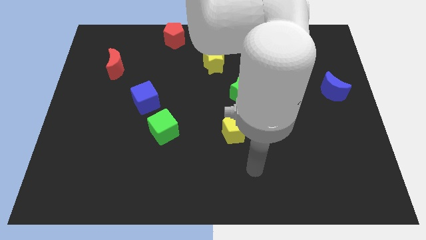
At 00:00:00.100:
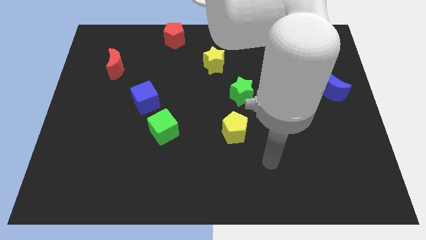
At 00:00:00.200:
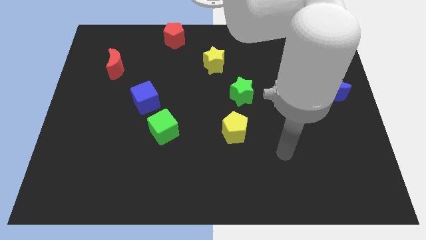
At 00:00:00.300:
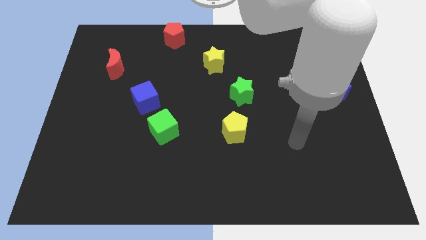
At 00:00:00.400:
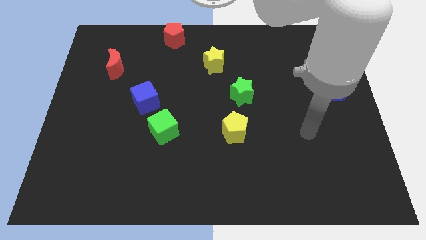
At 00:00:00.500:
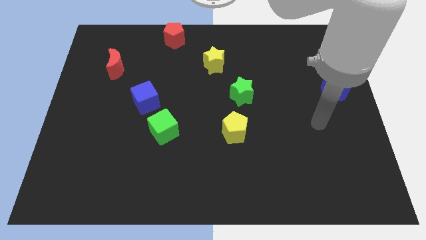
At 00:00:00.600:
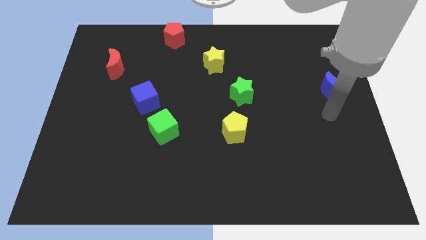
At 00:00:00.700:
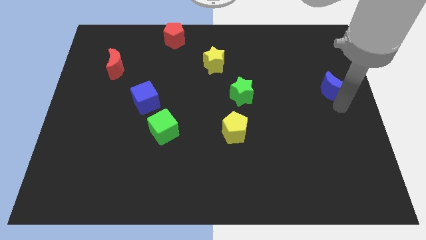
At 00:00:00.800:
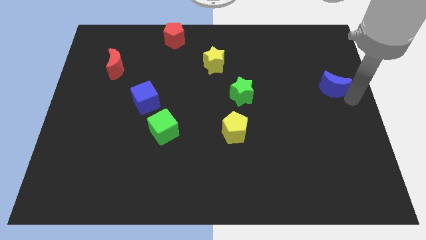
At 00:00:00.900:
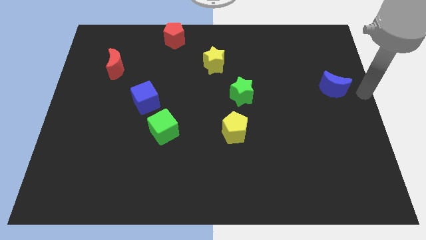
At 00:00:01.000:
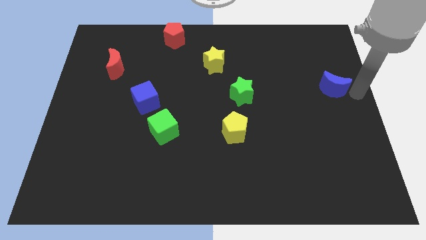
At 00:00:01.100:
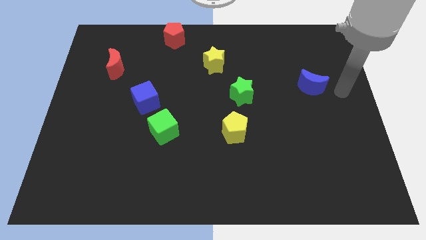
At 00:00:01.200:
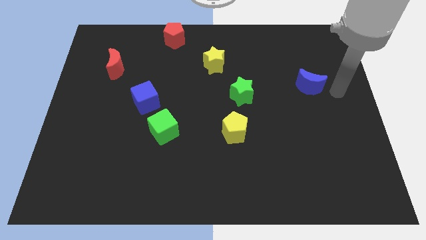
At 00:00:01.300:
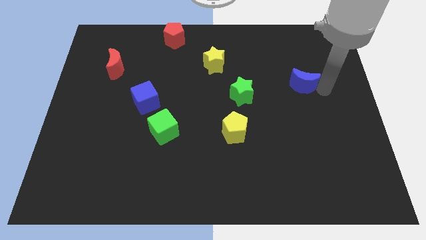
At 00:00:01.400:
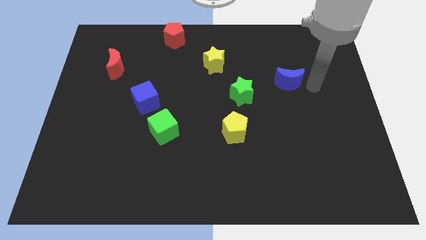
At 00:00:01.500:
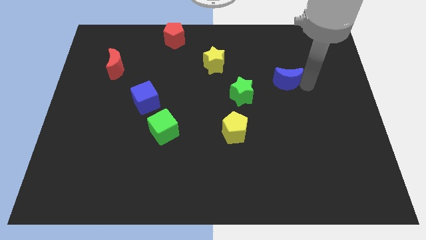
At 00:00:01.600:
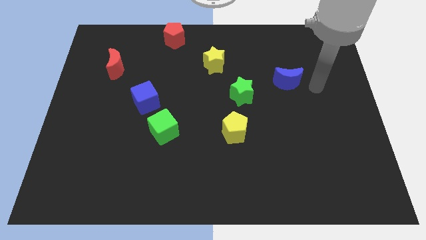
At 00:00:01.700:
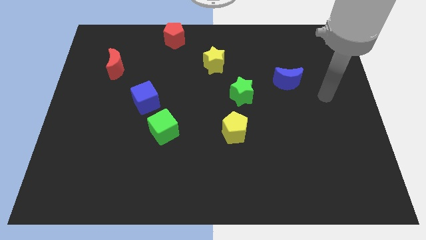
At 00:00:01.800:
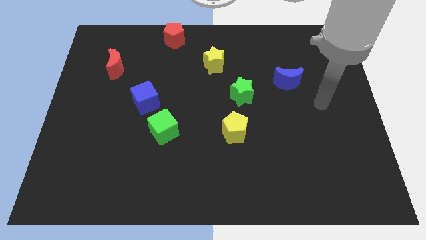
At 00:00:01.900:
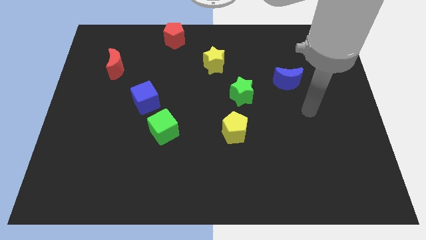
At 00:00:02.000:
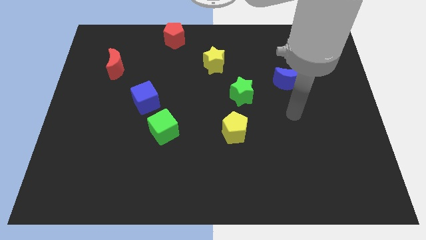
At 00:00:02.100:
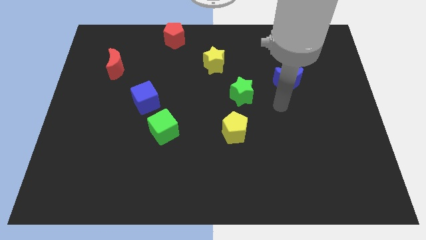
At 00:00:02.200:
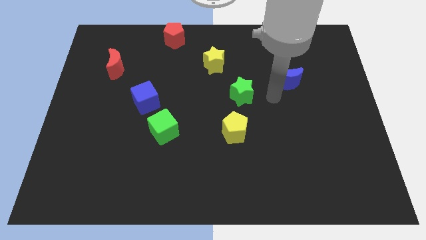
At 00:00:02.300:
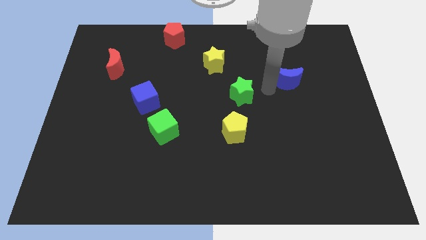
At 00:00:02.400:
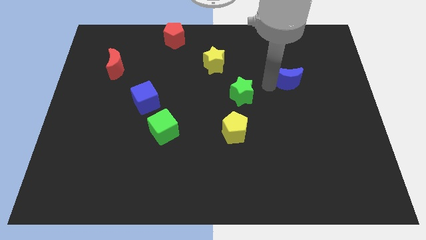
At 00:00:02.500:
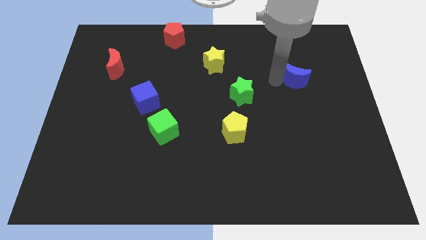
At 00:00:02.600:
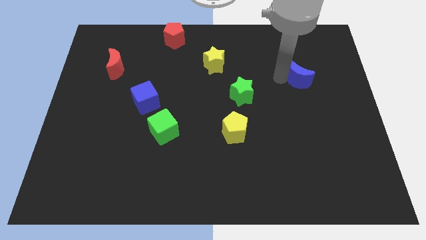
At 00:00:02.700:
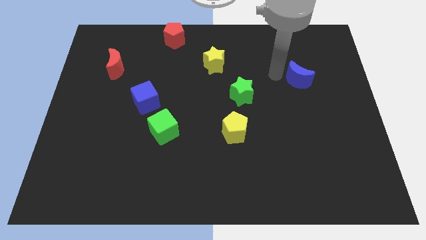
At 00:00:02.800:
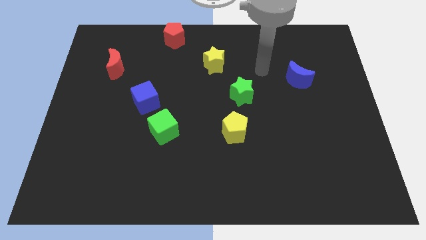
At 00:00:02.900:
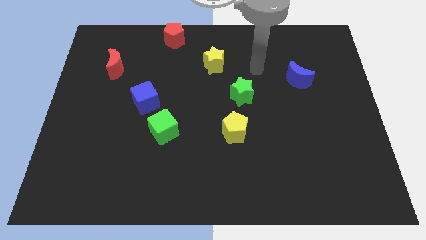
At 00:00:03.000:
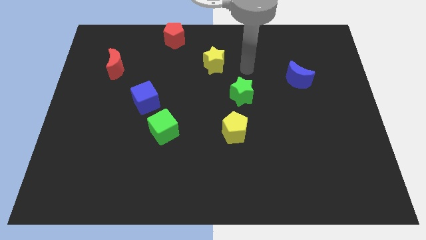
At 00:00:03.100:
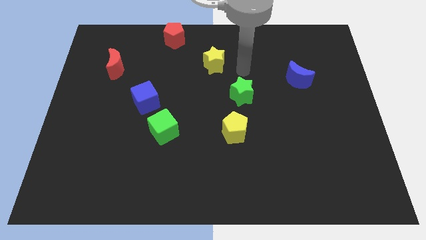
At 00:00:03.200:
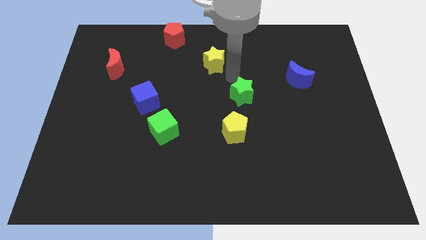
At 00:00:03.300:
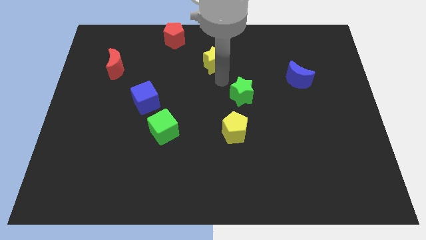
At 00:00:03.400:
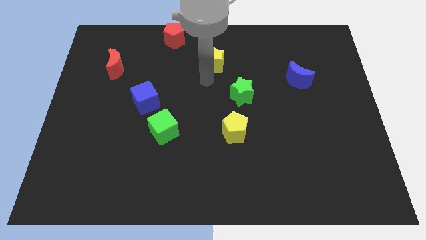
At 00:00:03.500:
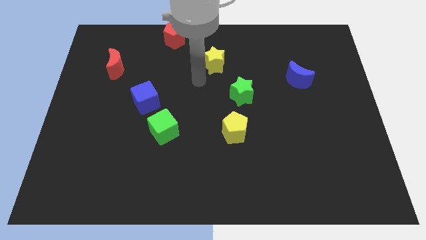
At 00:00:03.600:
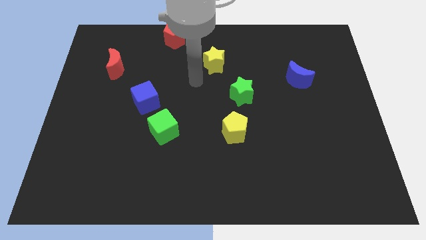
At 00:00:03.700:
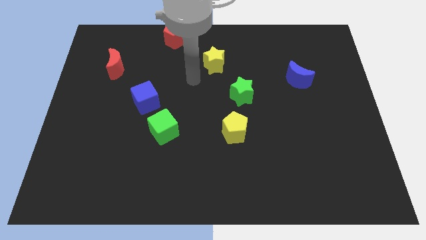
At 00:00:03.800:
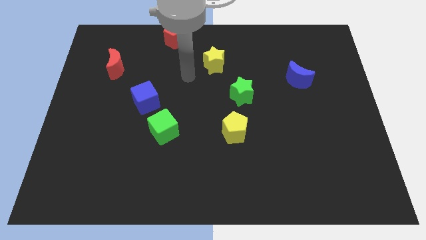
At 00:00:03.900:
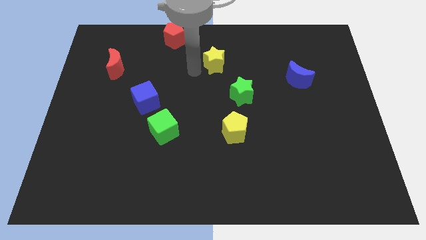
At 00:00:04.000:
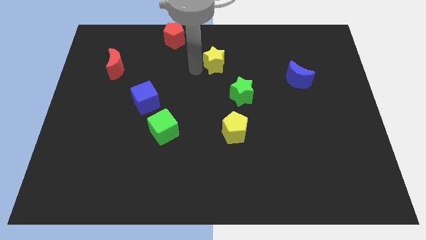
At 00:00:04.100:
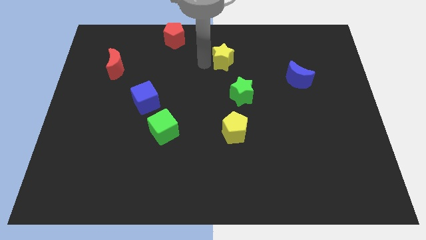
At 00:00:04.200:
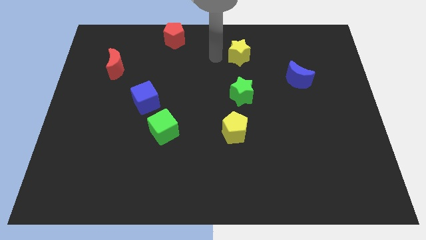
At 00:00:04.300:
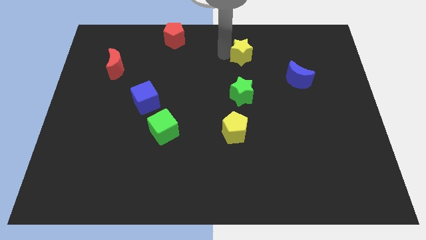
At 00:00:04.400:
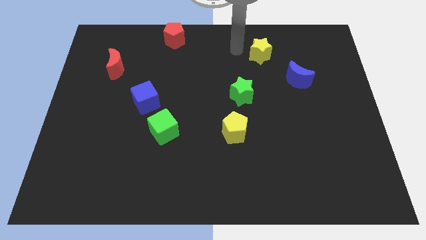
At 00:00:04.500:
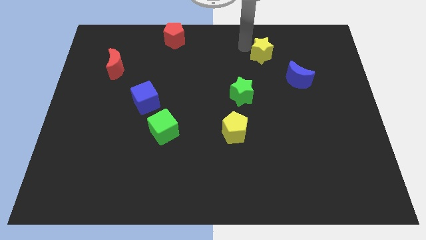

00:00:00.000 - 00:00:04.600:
move the yellow star diagonally to the top left of the blue moon

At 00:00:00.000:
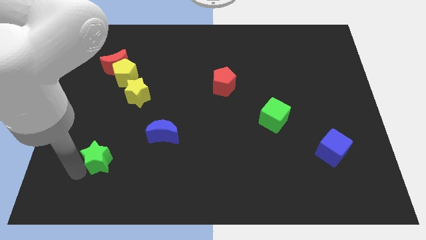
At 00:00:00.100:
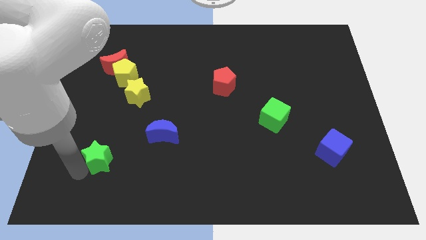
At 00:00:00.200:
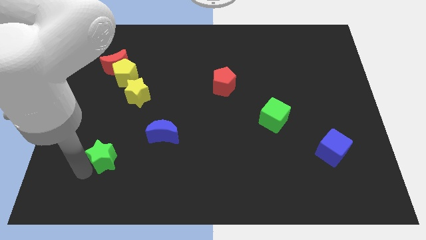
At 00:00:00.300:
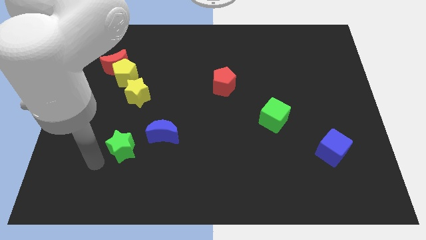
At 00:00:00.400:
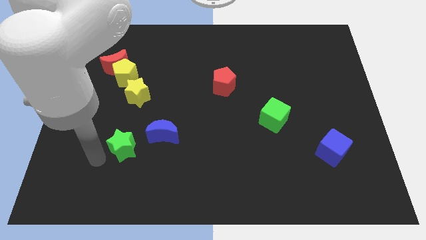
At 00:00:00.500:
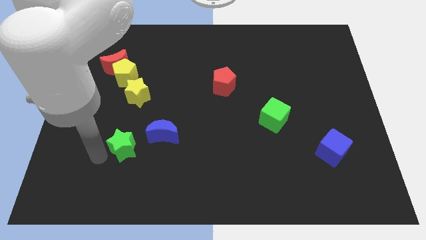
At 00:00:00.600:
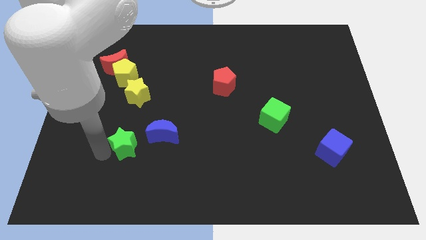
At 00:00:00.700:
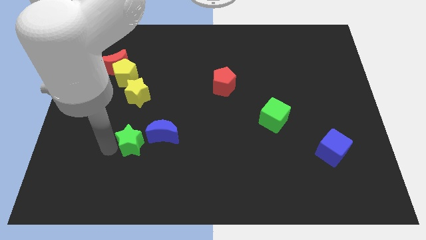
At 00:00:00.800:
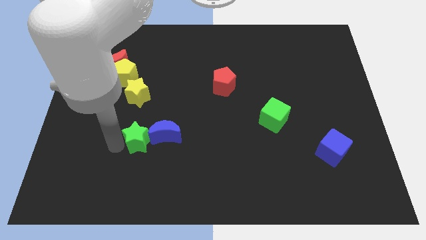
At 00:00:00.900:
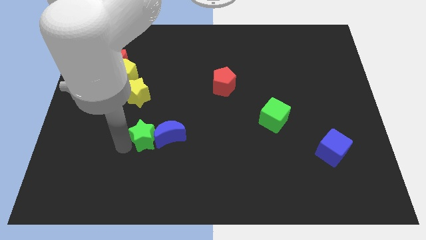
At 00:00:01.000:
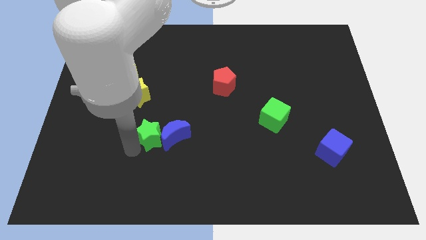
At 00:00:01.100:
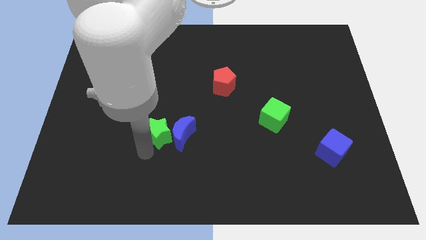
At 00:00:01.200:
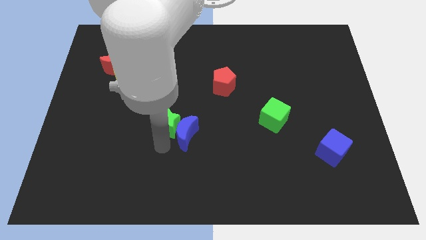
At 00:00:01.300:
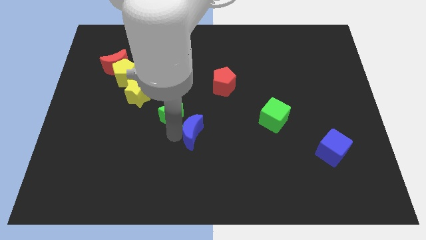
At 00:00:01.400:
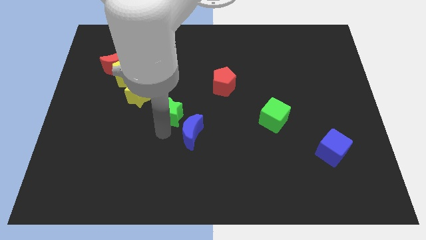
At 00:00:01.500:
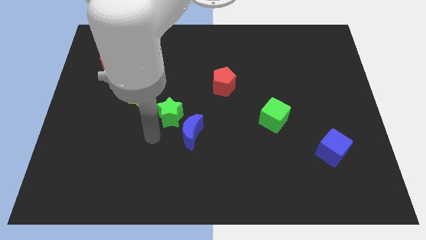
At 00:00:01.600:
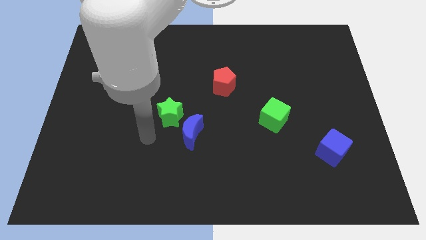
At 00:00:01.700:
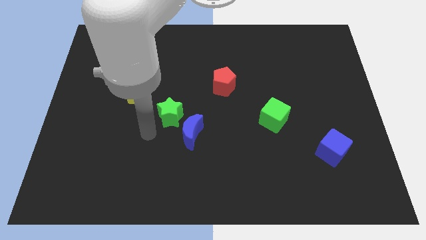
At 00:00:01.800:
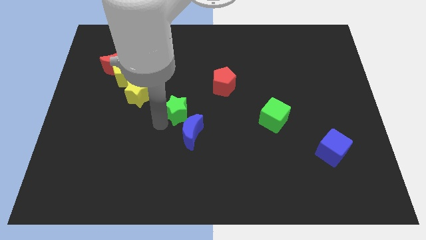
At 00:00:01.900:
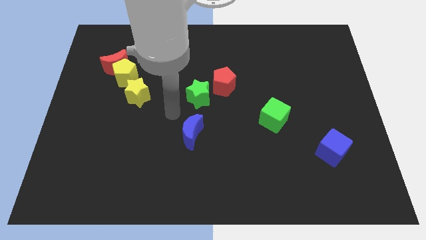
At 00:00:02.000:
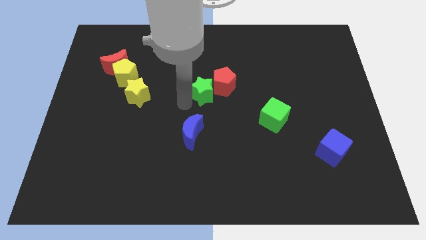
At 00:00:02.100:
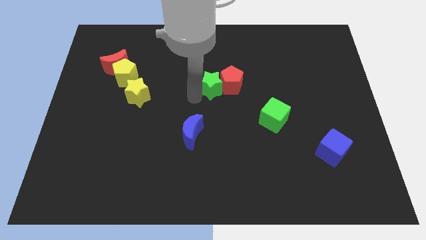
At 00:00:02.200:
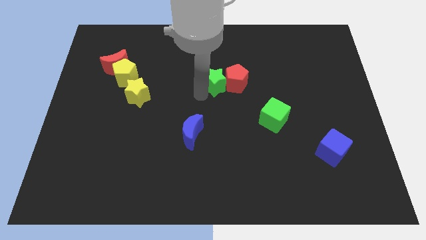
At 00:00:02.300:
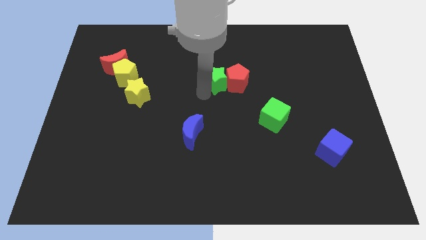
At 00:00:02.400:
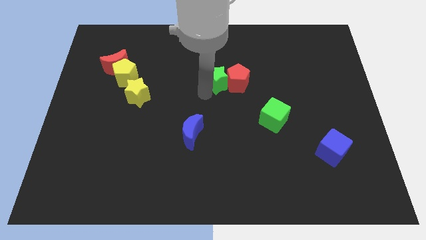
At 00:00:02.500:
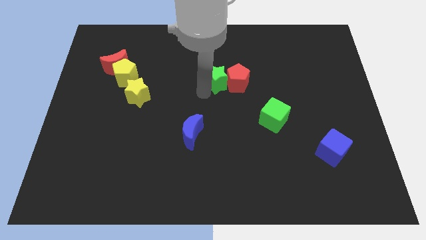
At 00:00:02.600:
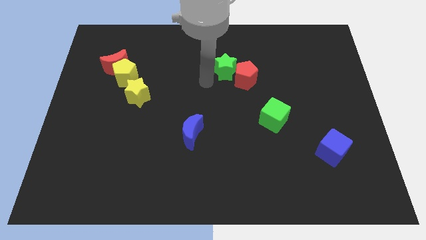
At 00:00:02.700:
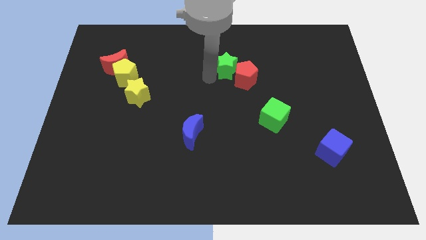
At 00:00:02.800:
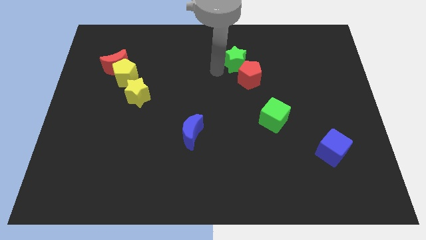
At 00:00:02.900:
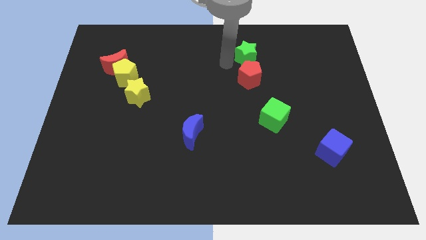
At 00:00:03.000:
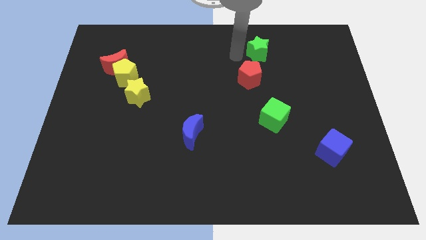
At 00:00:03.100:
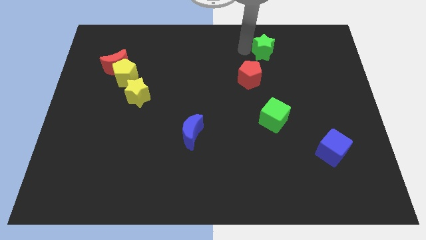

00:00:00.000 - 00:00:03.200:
move the green star towards top of red pentagon

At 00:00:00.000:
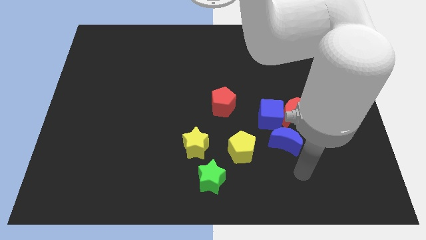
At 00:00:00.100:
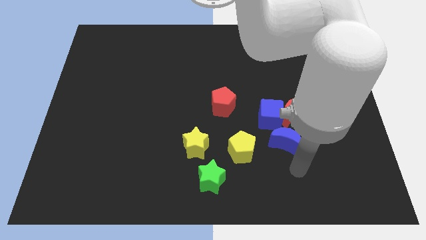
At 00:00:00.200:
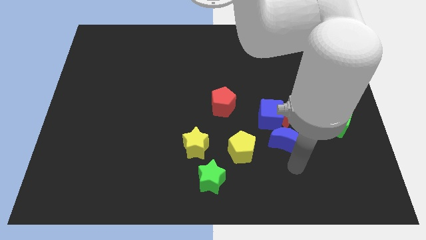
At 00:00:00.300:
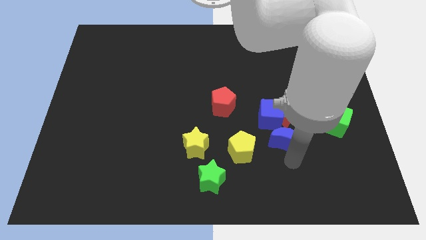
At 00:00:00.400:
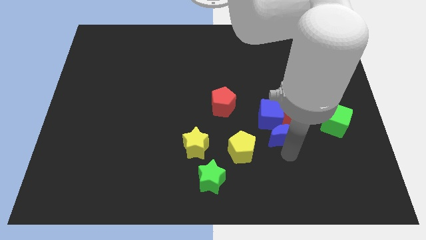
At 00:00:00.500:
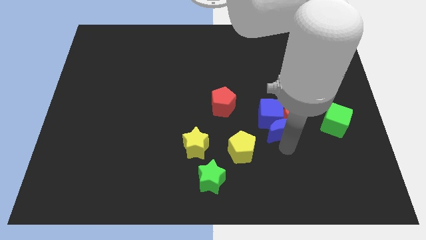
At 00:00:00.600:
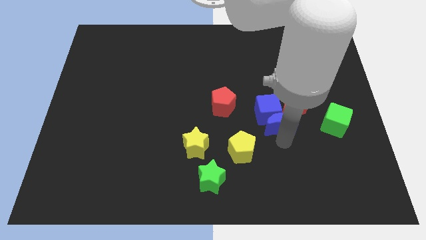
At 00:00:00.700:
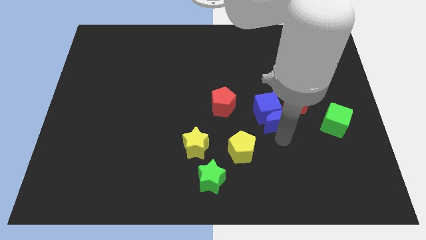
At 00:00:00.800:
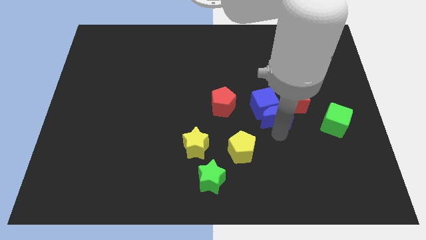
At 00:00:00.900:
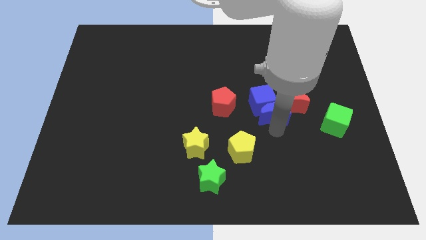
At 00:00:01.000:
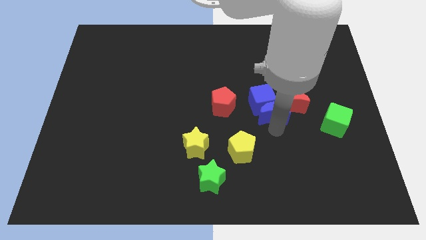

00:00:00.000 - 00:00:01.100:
push the blue crescent into the bottom of the blue cube
